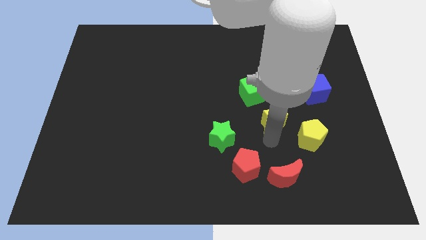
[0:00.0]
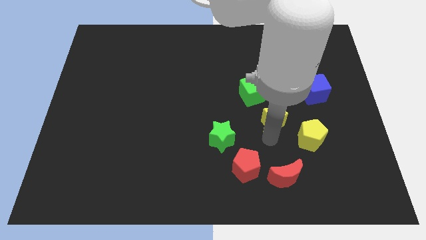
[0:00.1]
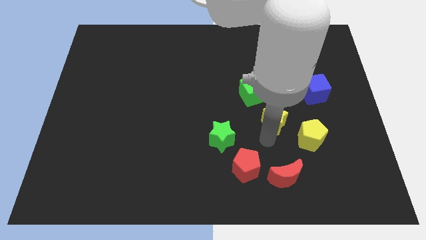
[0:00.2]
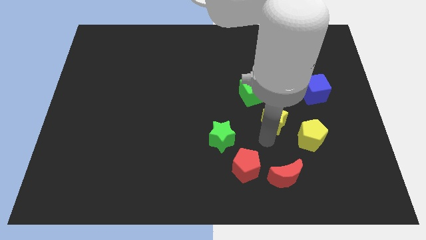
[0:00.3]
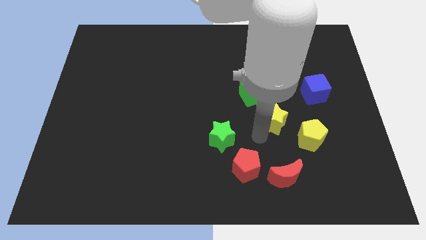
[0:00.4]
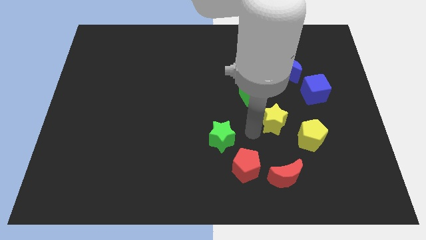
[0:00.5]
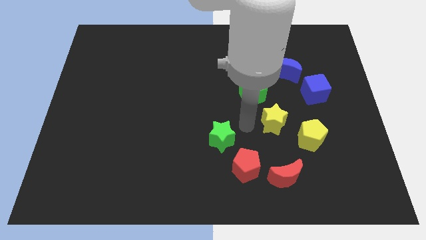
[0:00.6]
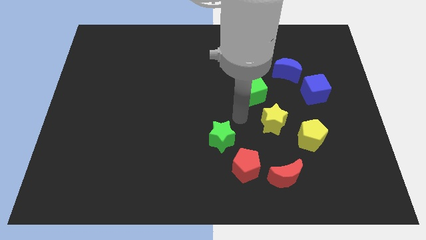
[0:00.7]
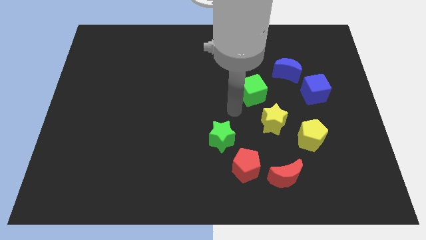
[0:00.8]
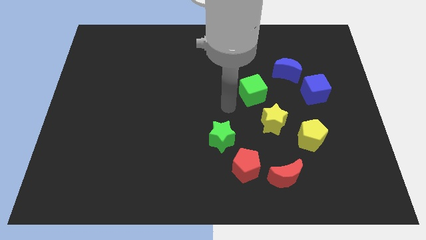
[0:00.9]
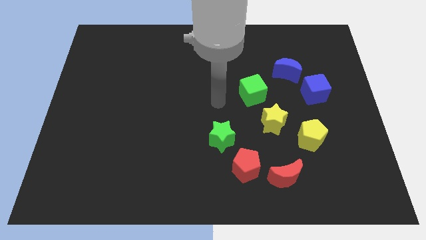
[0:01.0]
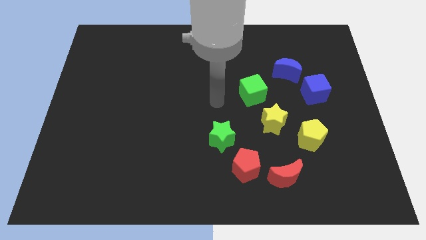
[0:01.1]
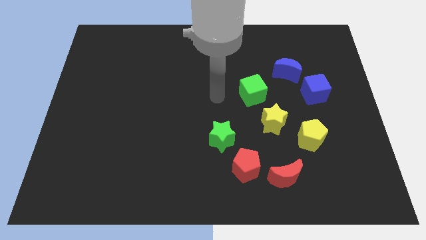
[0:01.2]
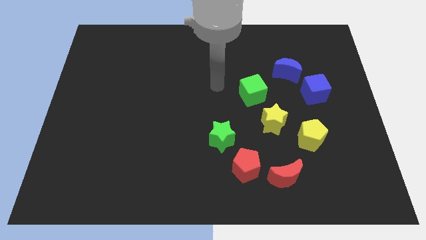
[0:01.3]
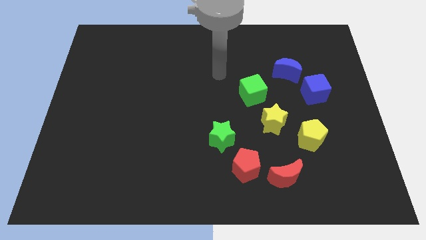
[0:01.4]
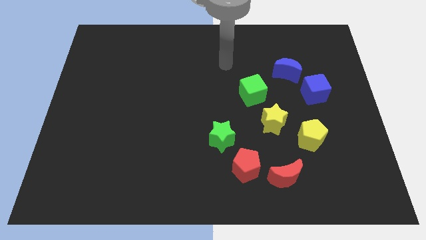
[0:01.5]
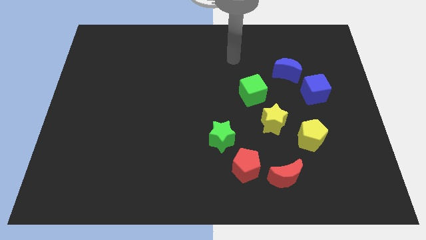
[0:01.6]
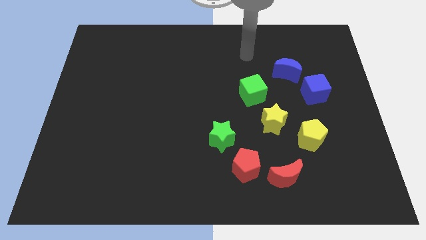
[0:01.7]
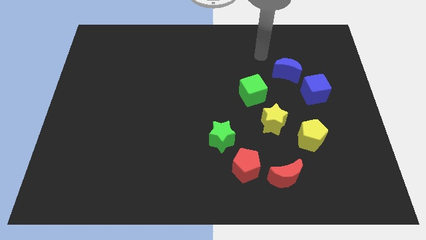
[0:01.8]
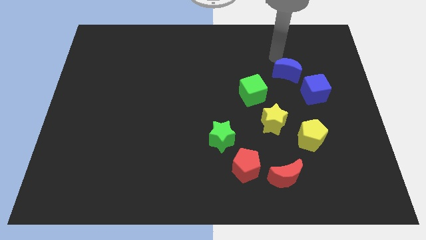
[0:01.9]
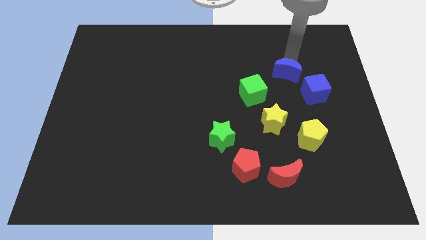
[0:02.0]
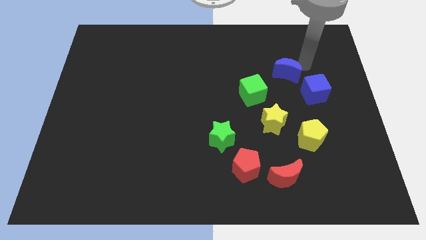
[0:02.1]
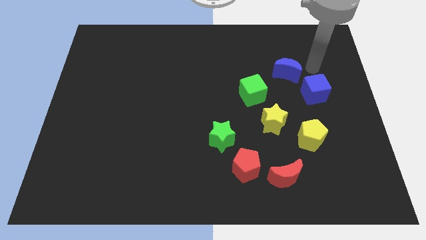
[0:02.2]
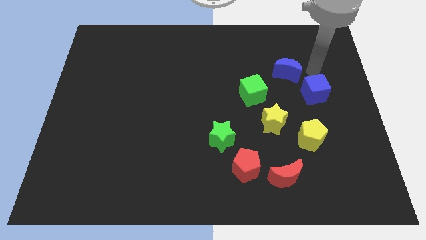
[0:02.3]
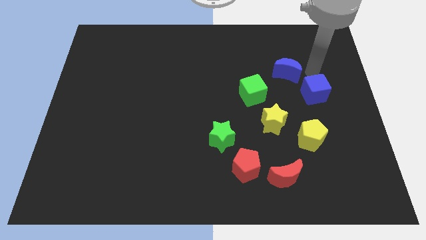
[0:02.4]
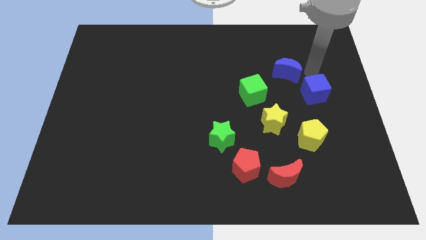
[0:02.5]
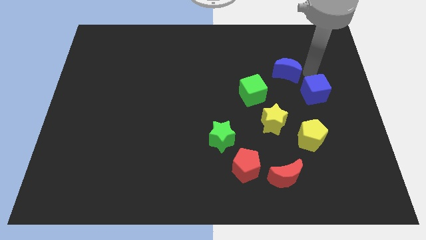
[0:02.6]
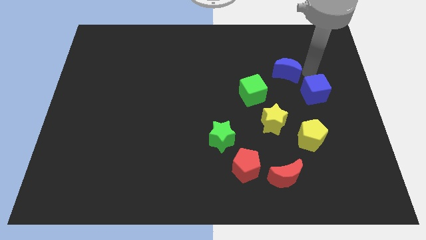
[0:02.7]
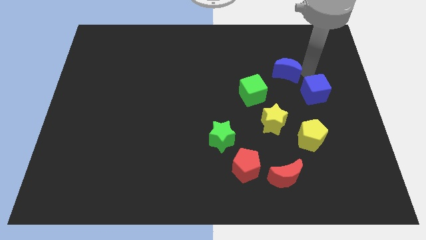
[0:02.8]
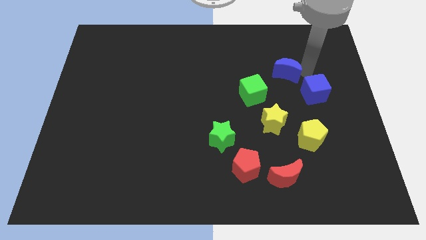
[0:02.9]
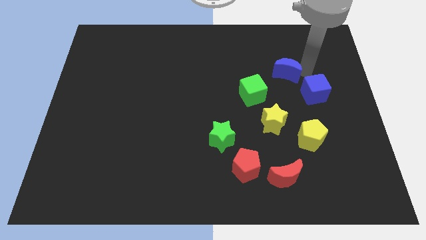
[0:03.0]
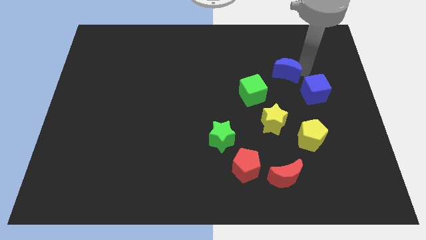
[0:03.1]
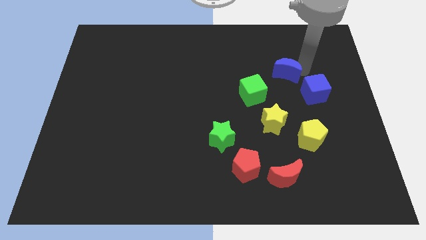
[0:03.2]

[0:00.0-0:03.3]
move your arm away from the yellow star

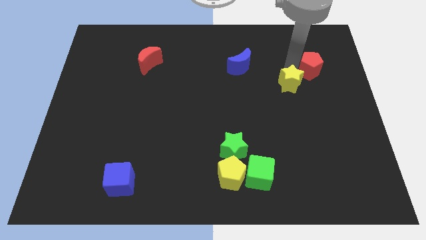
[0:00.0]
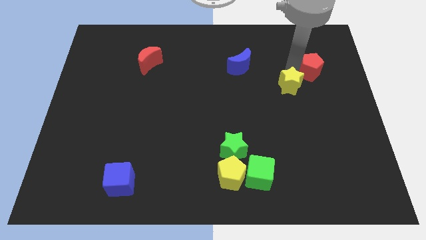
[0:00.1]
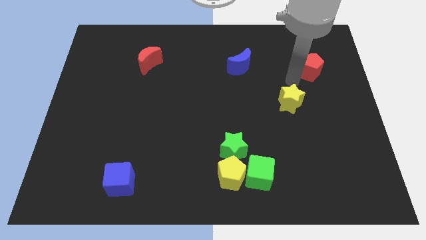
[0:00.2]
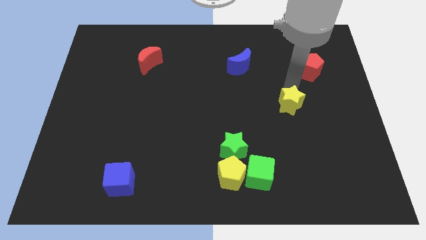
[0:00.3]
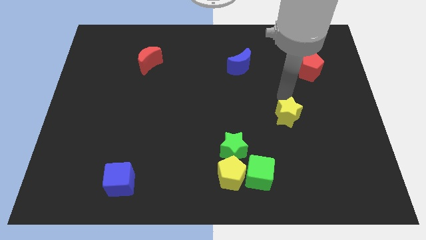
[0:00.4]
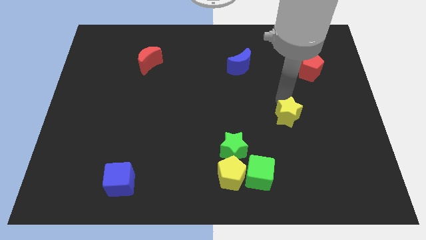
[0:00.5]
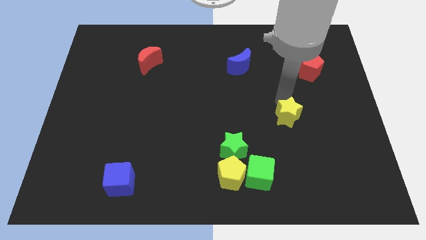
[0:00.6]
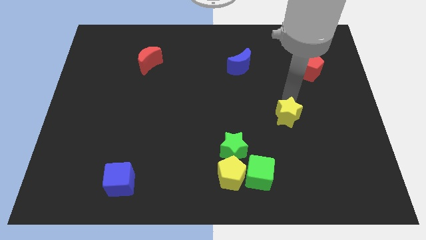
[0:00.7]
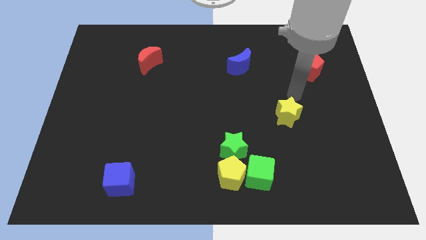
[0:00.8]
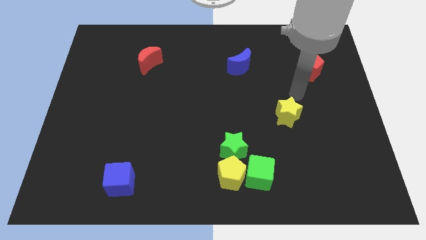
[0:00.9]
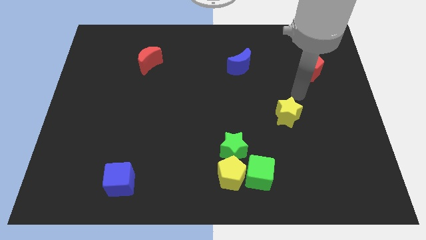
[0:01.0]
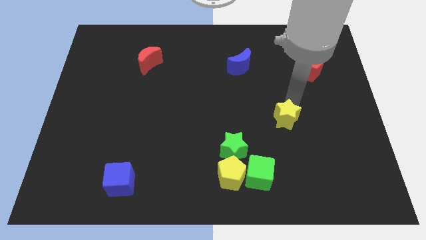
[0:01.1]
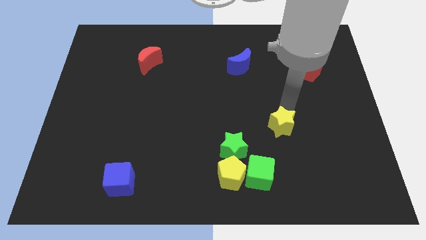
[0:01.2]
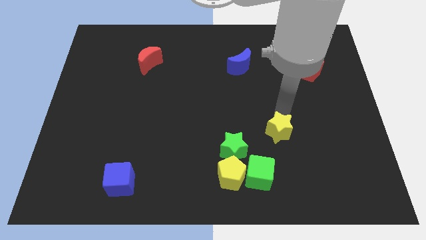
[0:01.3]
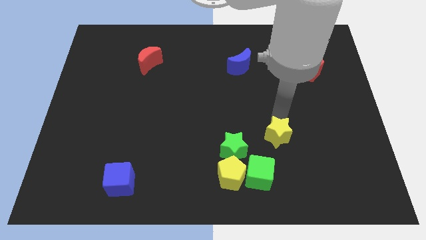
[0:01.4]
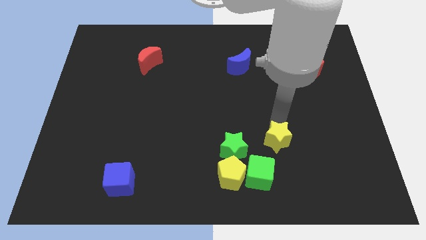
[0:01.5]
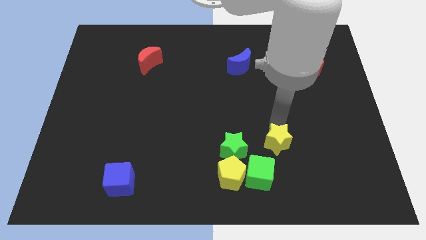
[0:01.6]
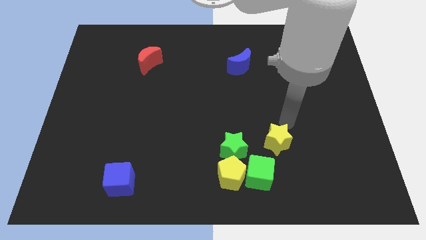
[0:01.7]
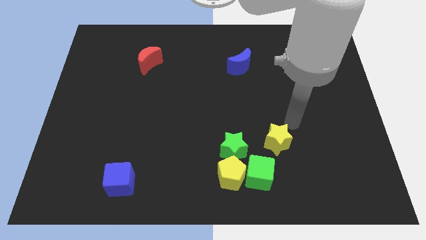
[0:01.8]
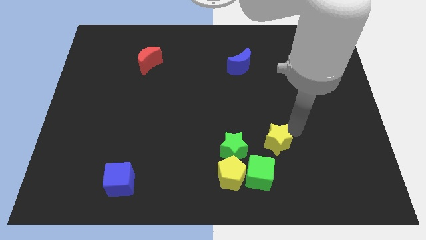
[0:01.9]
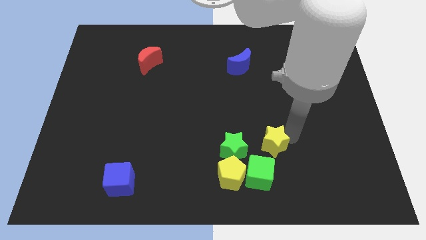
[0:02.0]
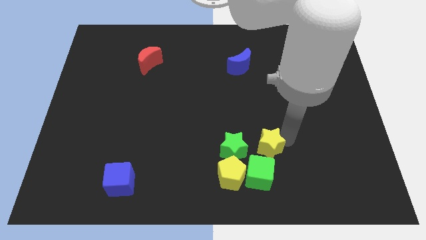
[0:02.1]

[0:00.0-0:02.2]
slide yellow star towards green cube

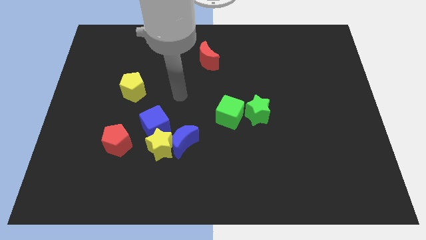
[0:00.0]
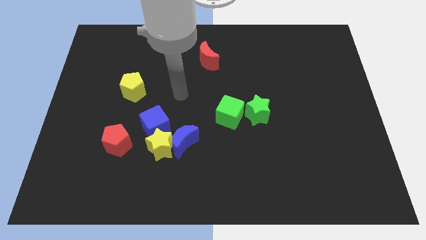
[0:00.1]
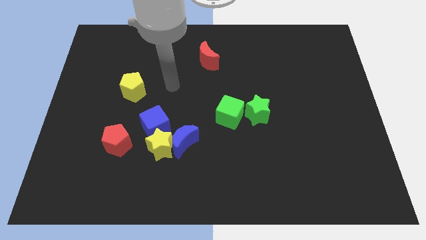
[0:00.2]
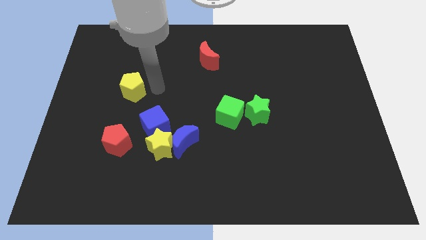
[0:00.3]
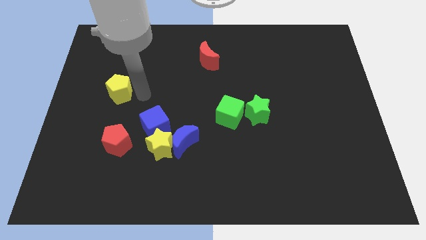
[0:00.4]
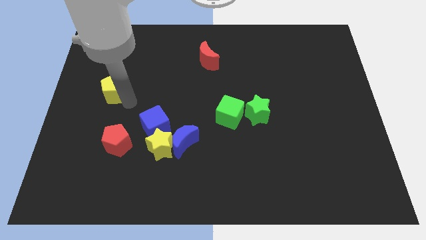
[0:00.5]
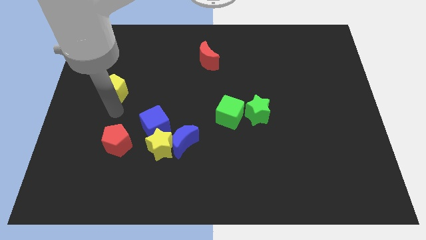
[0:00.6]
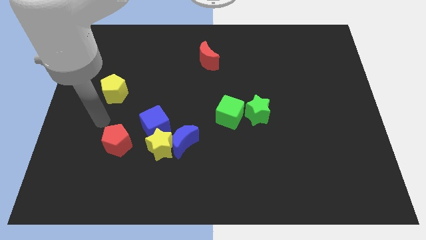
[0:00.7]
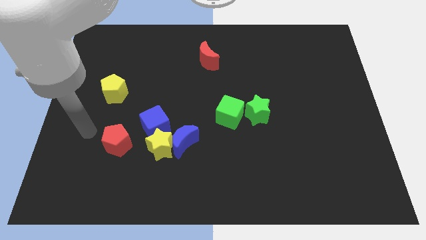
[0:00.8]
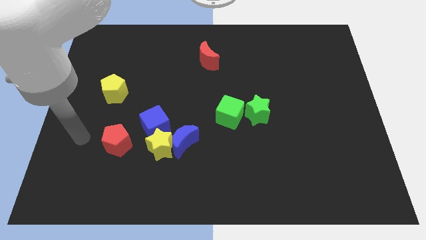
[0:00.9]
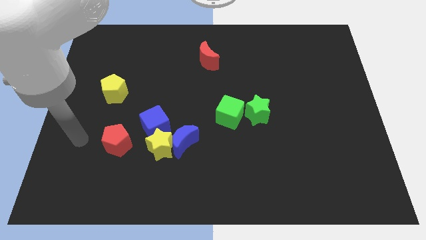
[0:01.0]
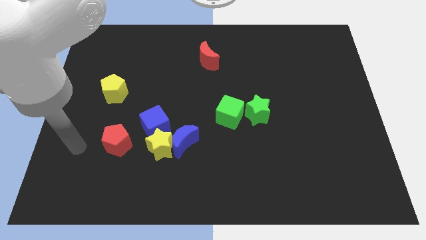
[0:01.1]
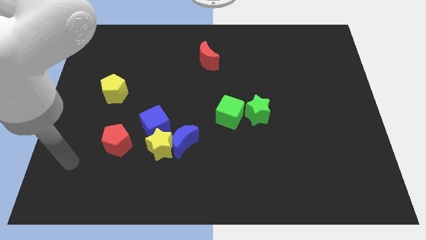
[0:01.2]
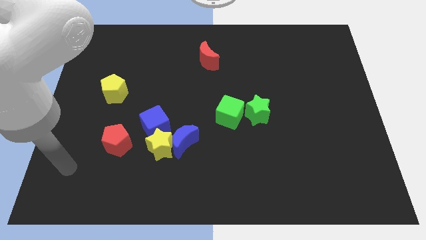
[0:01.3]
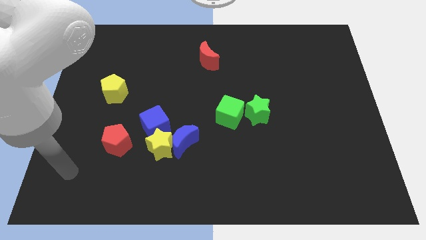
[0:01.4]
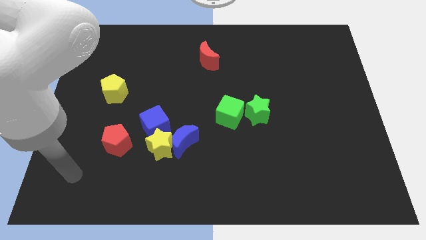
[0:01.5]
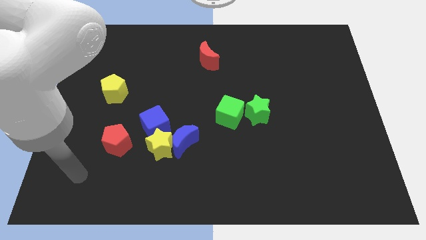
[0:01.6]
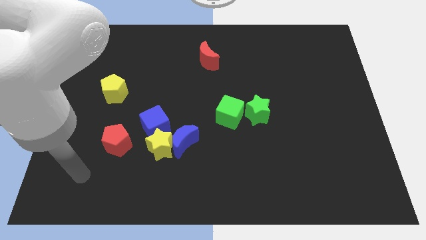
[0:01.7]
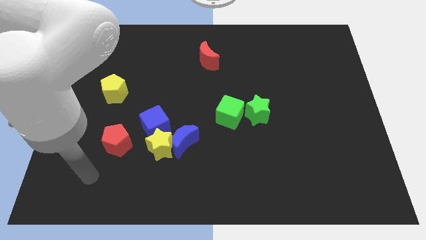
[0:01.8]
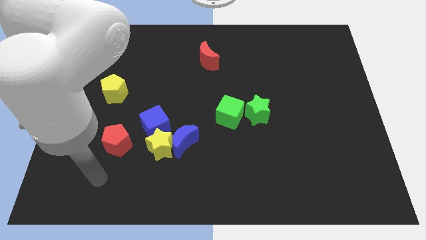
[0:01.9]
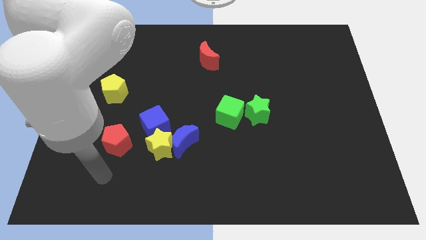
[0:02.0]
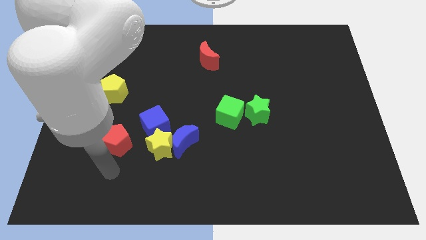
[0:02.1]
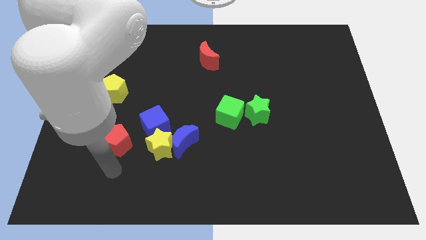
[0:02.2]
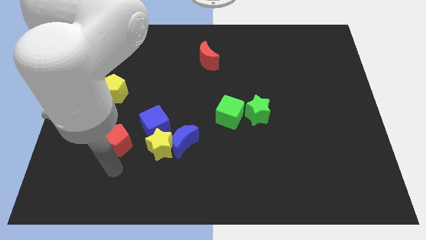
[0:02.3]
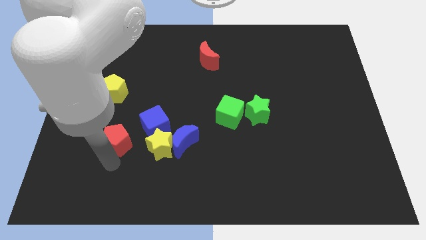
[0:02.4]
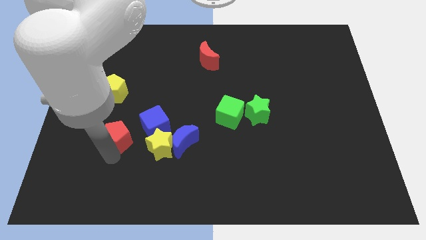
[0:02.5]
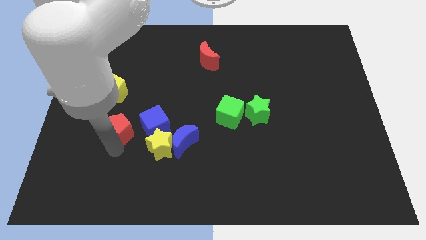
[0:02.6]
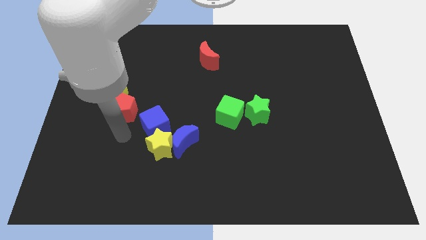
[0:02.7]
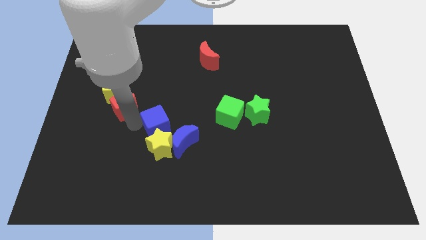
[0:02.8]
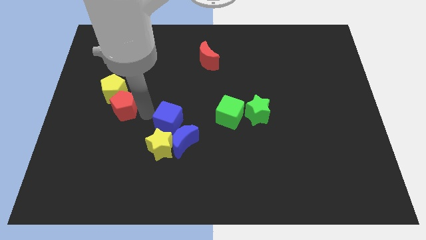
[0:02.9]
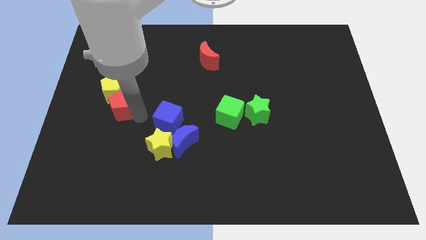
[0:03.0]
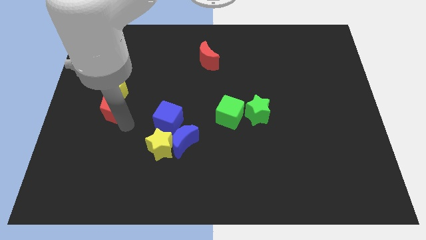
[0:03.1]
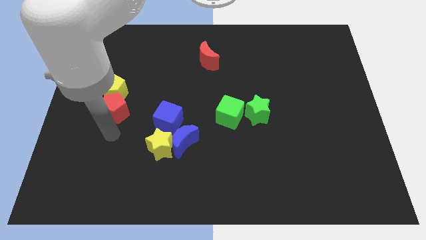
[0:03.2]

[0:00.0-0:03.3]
place the red pentagon below the yellow pentagon
